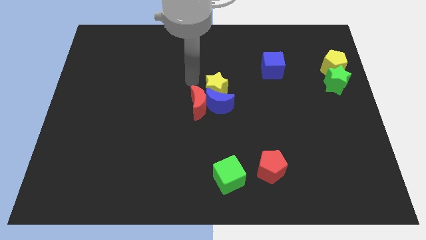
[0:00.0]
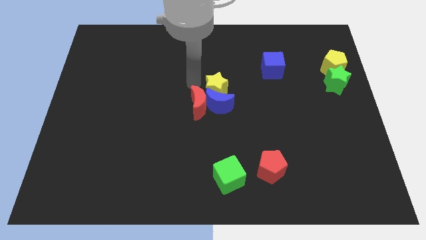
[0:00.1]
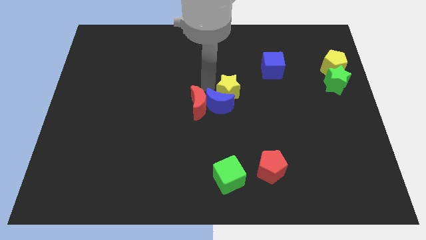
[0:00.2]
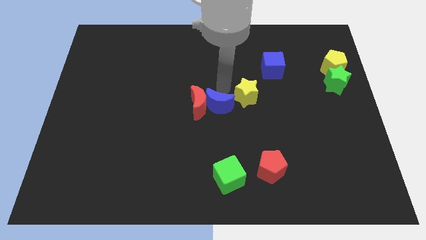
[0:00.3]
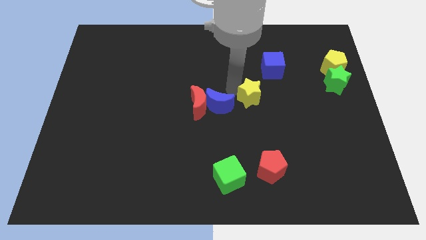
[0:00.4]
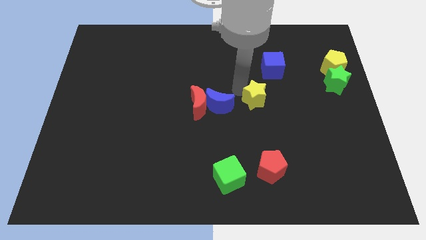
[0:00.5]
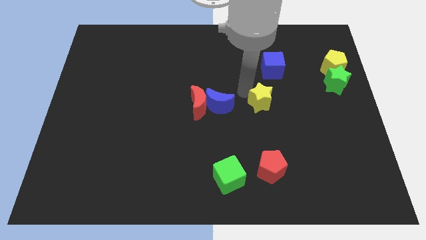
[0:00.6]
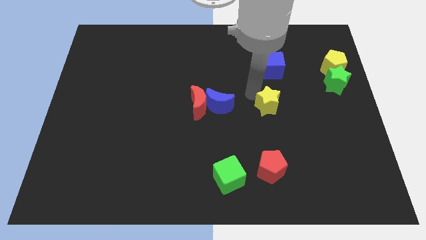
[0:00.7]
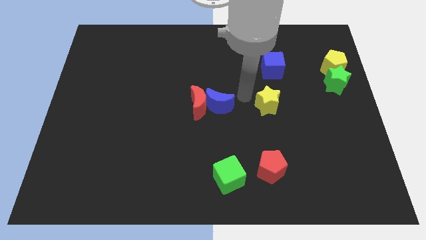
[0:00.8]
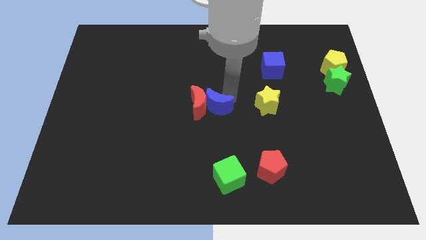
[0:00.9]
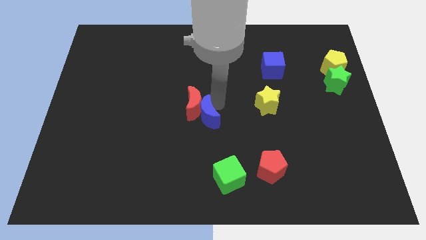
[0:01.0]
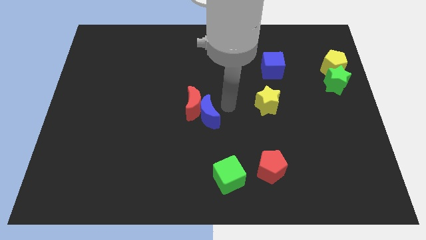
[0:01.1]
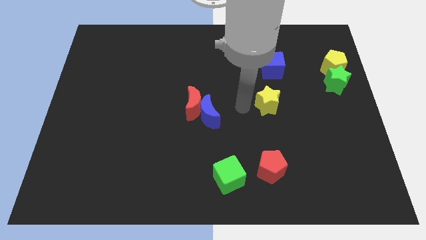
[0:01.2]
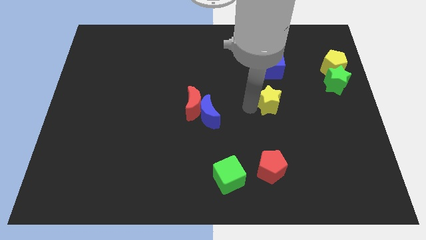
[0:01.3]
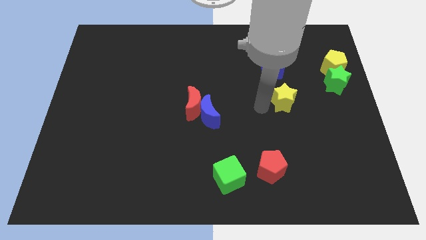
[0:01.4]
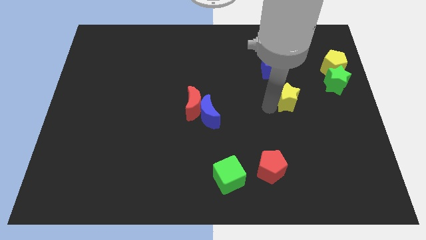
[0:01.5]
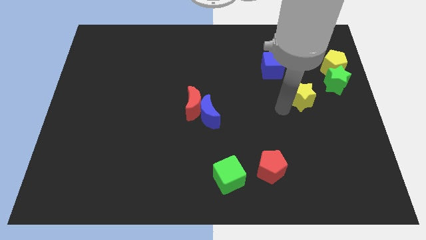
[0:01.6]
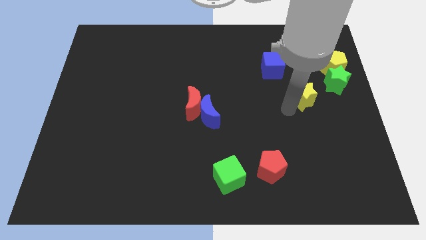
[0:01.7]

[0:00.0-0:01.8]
move the yellow star towards the green star

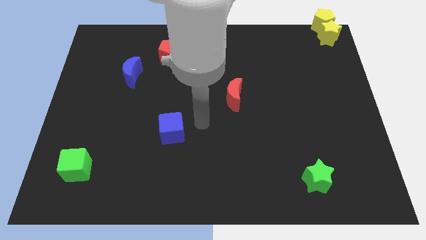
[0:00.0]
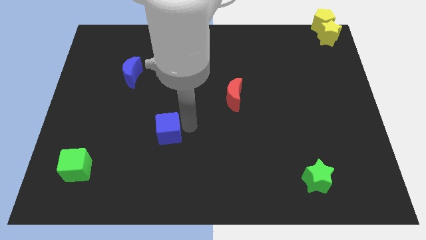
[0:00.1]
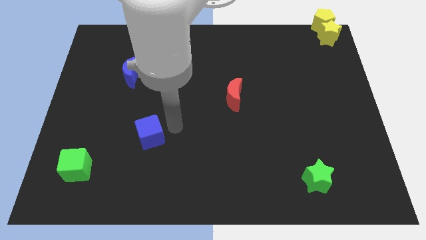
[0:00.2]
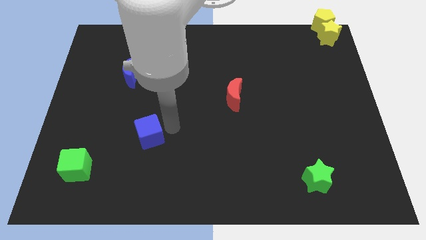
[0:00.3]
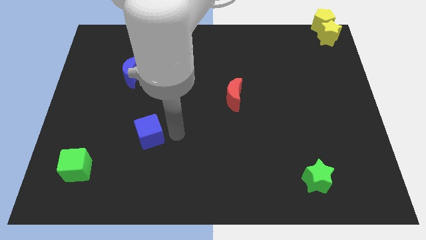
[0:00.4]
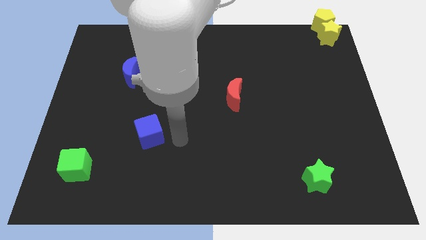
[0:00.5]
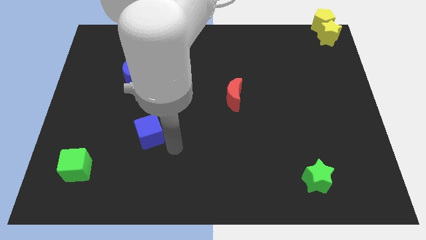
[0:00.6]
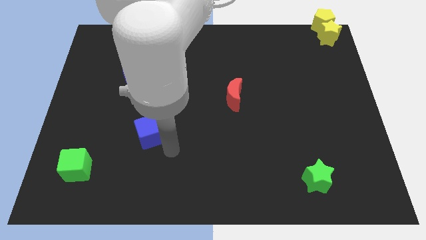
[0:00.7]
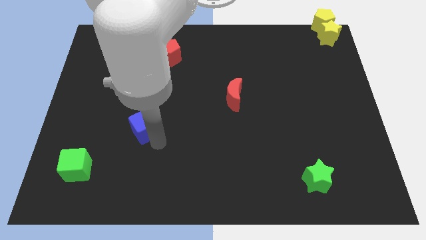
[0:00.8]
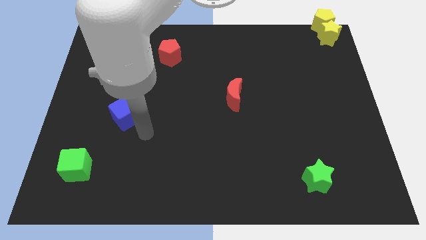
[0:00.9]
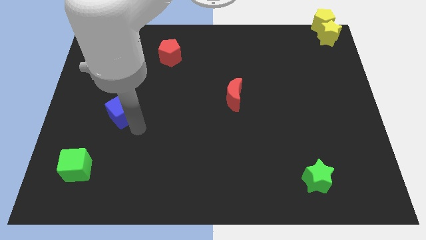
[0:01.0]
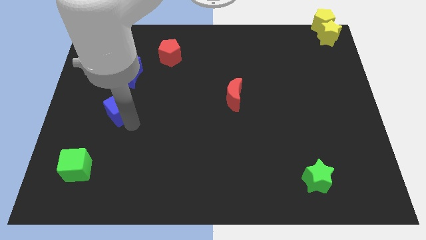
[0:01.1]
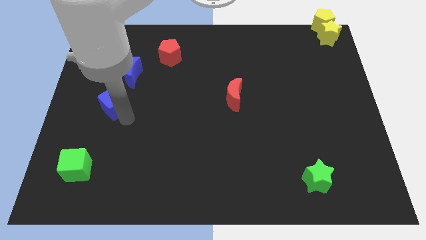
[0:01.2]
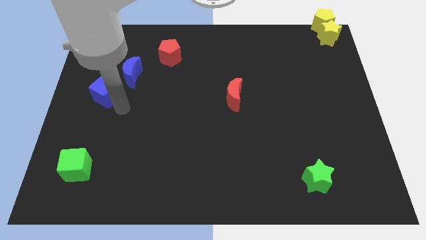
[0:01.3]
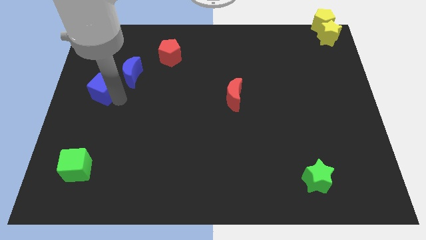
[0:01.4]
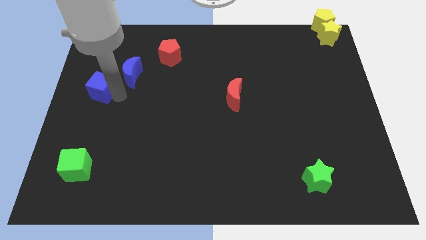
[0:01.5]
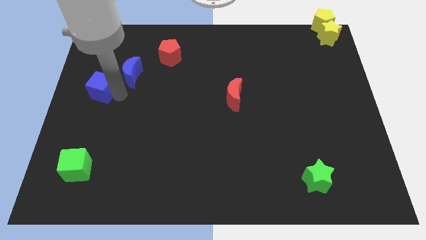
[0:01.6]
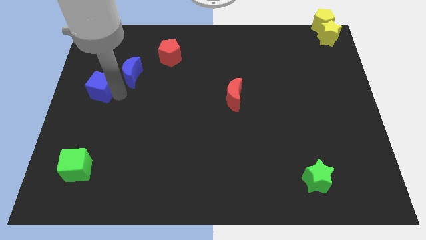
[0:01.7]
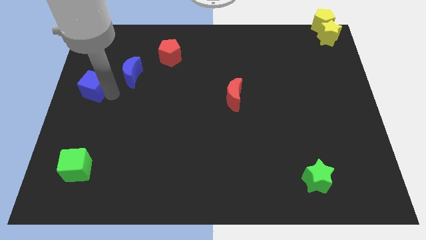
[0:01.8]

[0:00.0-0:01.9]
push the blue cube towards the bottom left of the blue crescent

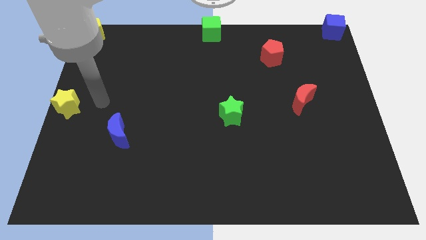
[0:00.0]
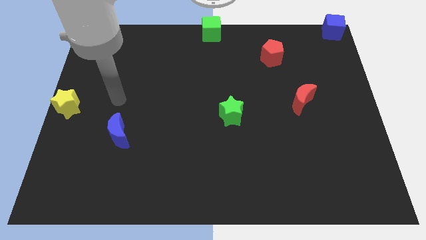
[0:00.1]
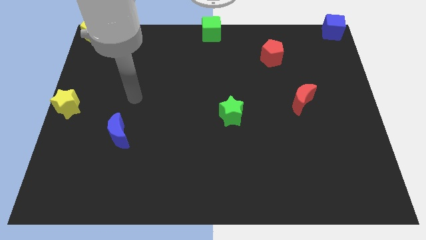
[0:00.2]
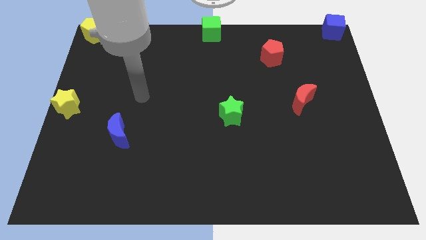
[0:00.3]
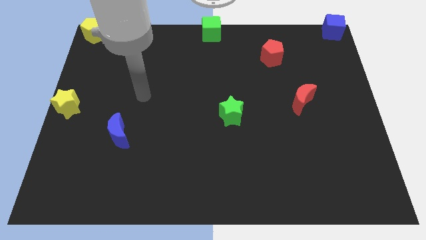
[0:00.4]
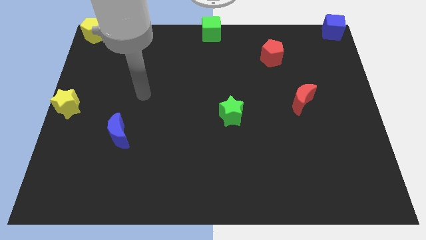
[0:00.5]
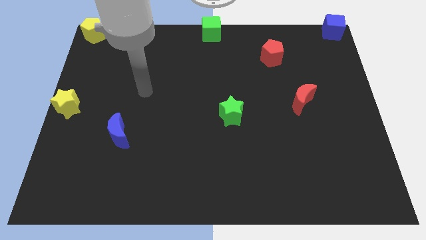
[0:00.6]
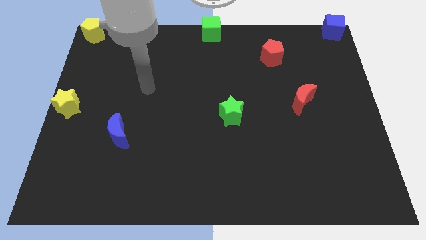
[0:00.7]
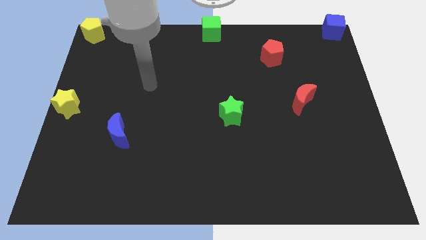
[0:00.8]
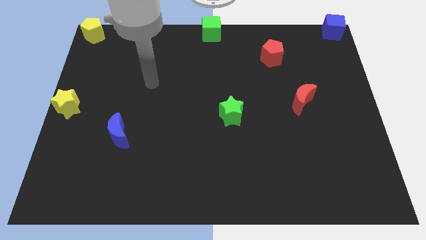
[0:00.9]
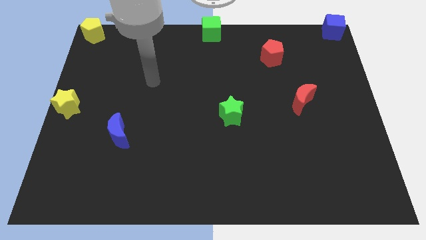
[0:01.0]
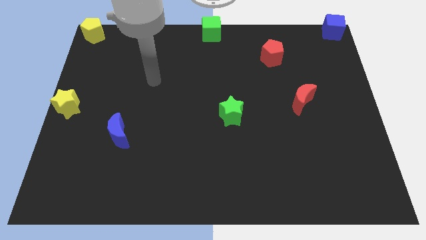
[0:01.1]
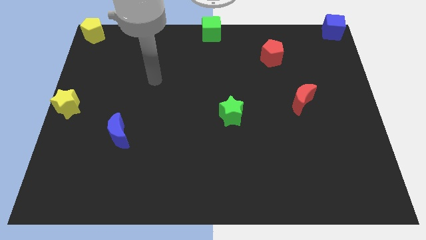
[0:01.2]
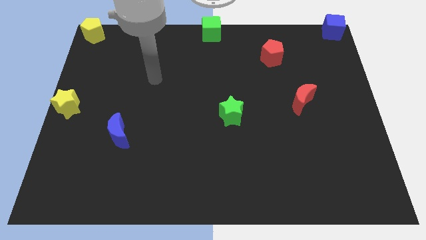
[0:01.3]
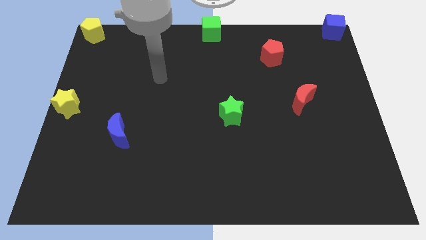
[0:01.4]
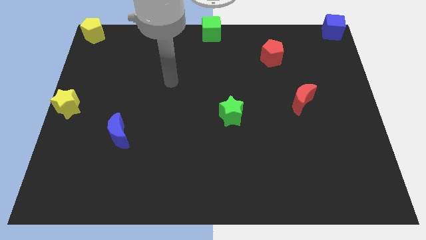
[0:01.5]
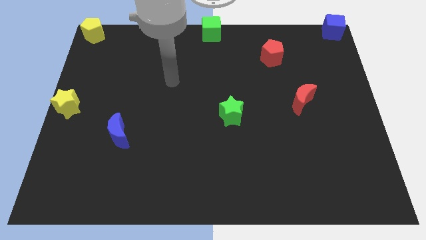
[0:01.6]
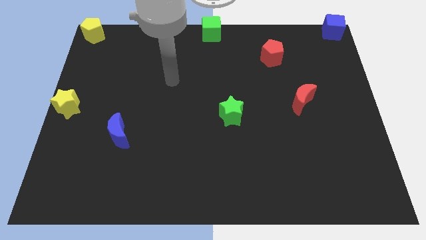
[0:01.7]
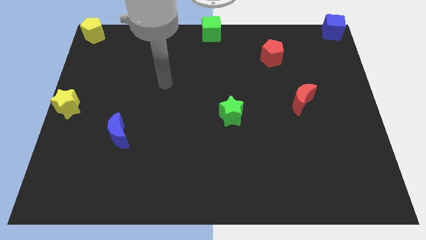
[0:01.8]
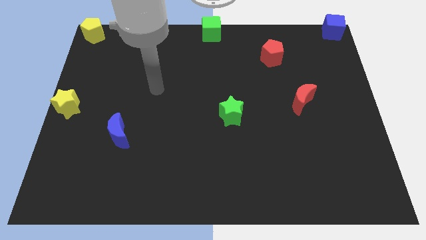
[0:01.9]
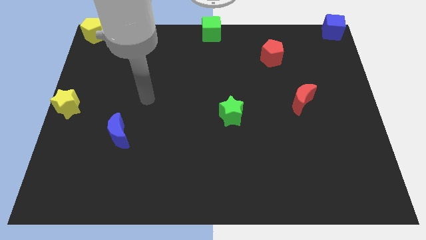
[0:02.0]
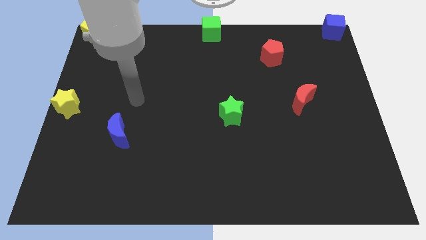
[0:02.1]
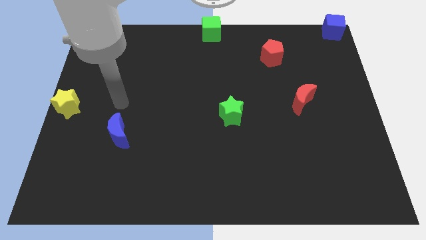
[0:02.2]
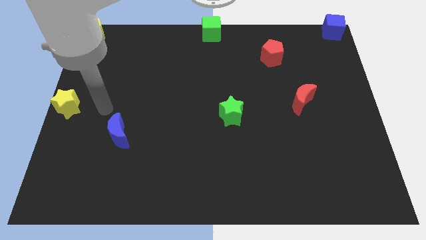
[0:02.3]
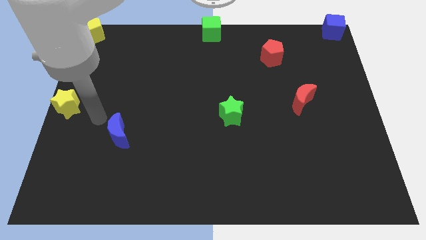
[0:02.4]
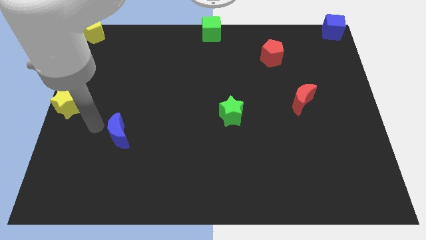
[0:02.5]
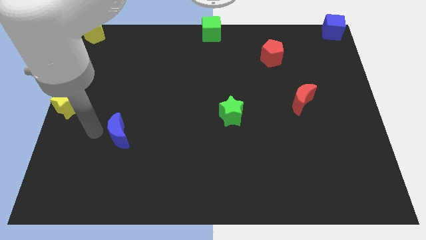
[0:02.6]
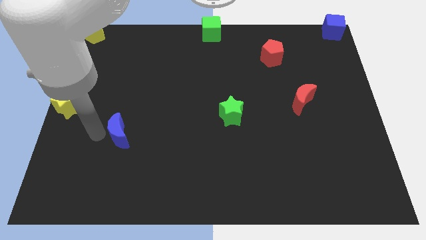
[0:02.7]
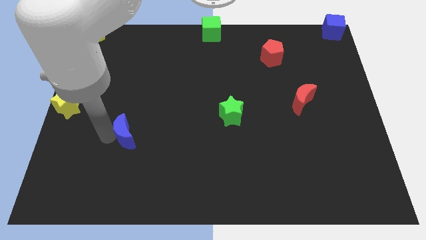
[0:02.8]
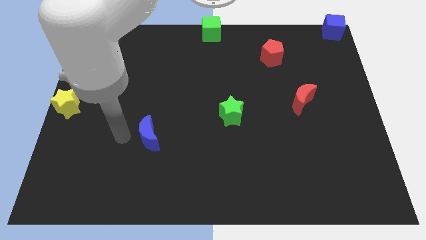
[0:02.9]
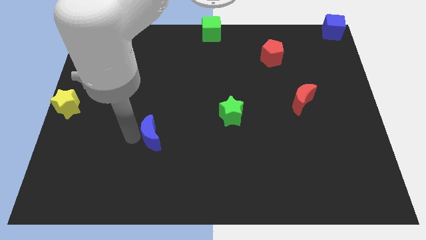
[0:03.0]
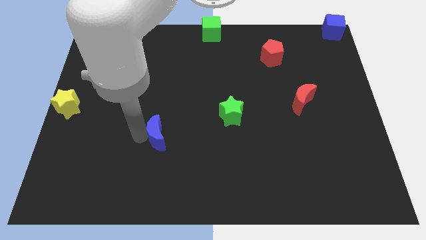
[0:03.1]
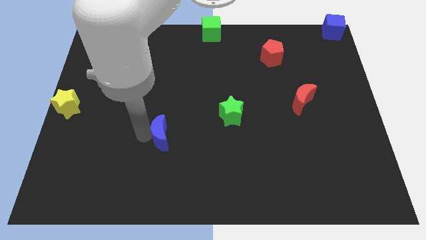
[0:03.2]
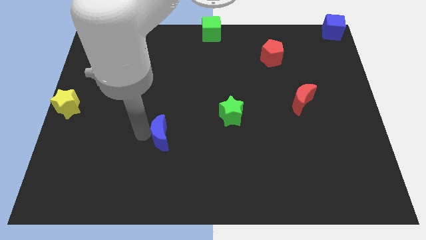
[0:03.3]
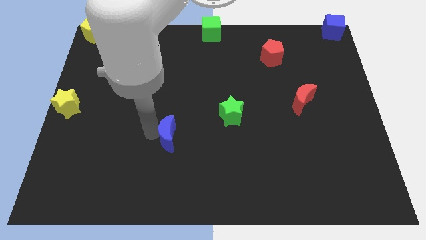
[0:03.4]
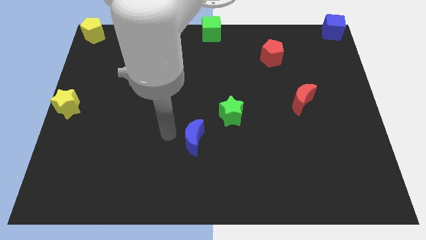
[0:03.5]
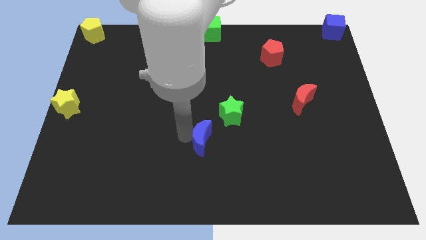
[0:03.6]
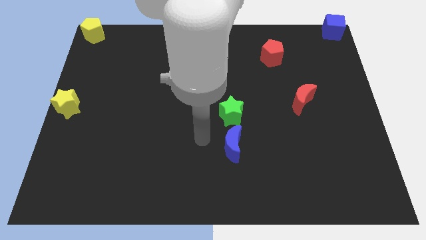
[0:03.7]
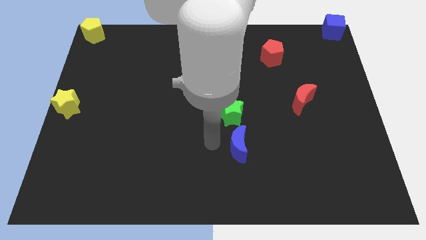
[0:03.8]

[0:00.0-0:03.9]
place the blue moon below the green star

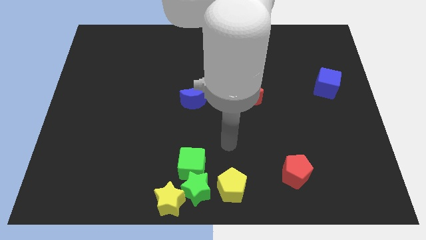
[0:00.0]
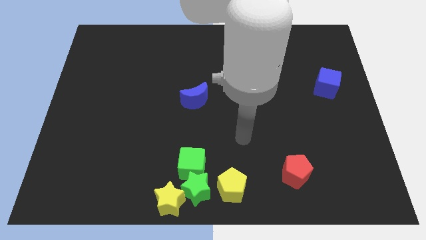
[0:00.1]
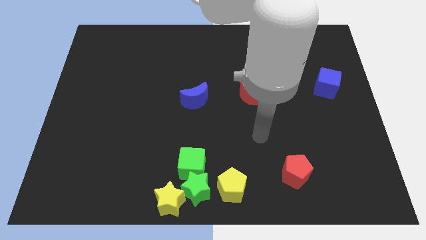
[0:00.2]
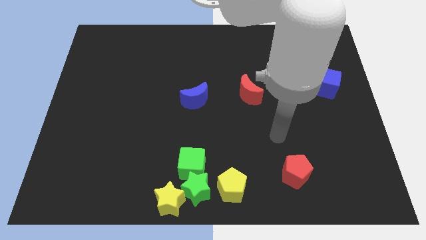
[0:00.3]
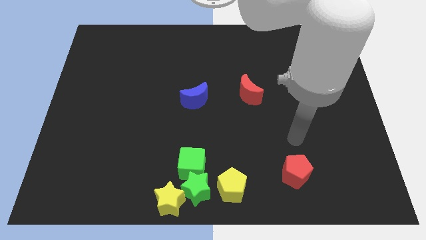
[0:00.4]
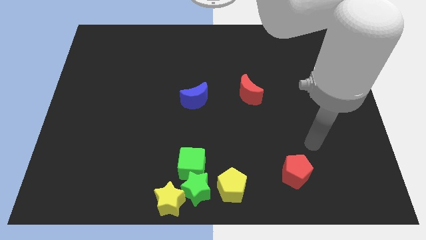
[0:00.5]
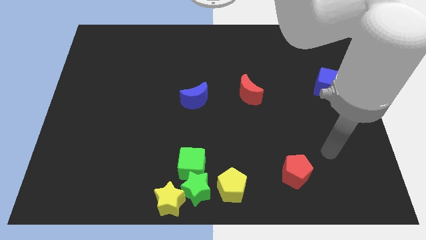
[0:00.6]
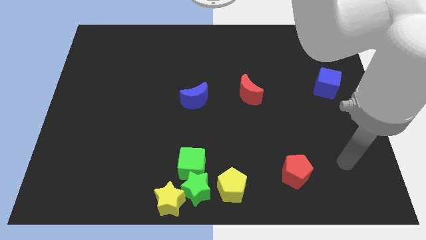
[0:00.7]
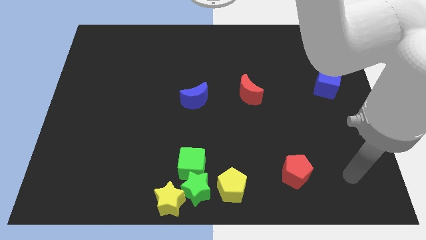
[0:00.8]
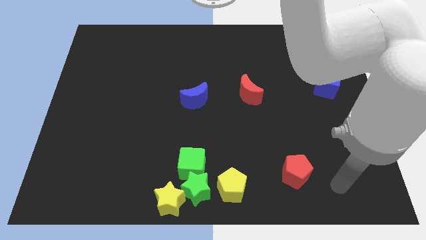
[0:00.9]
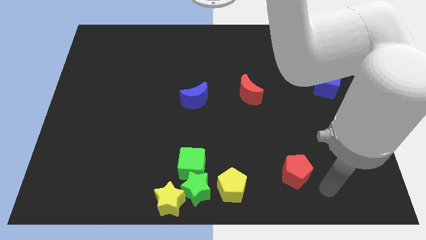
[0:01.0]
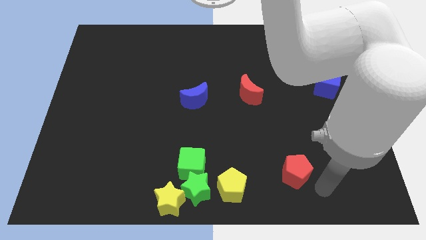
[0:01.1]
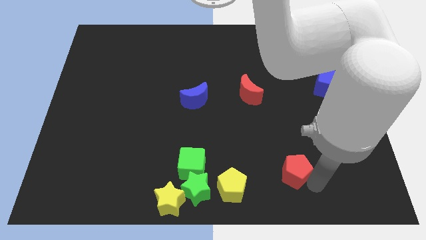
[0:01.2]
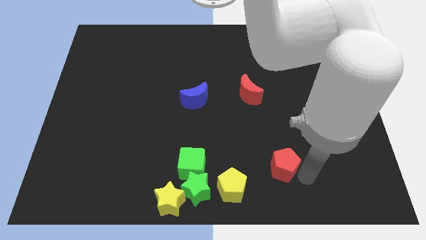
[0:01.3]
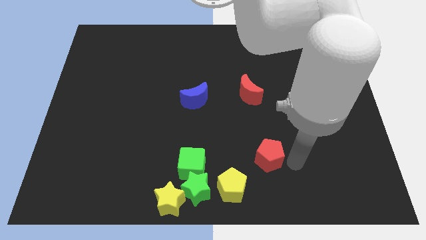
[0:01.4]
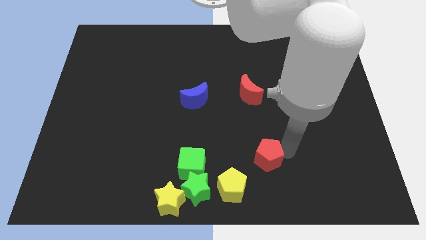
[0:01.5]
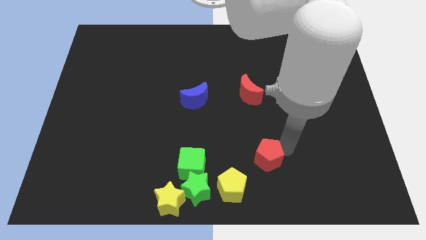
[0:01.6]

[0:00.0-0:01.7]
move arm towards the red pentagon on the bottom right of the board
